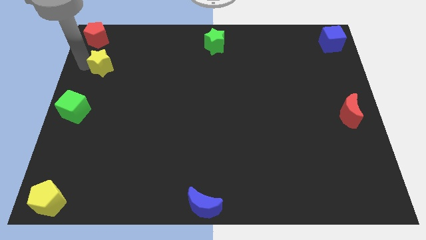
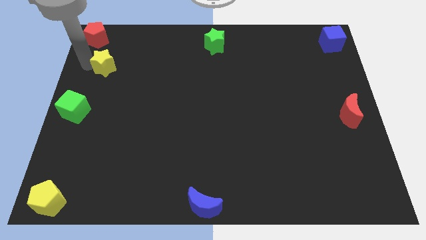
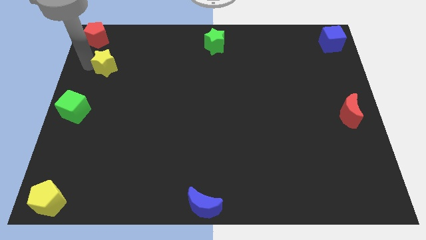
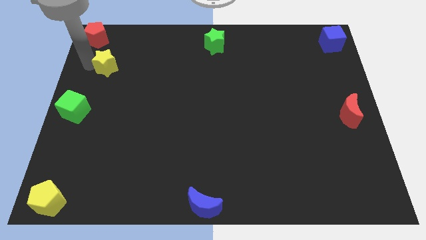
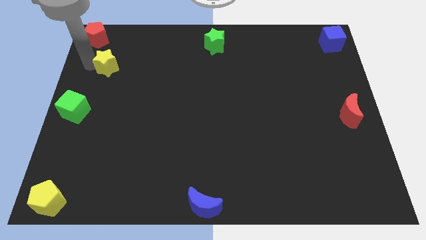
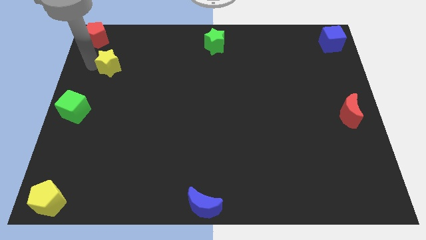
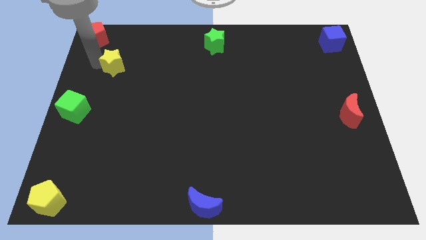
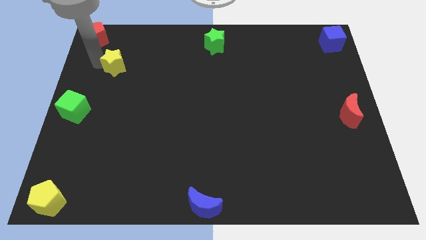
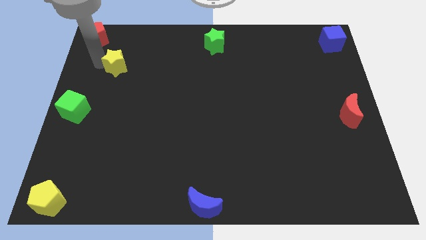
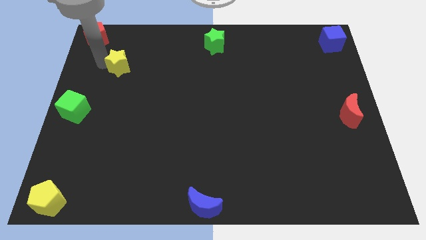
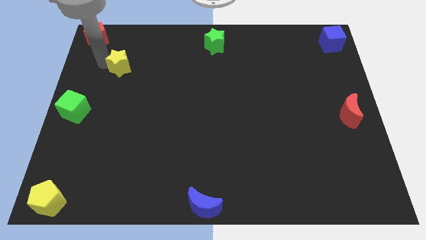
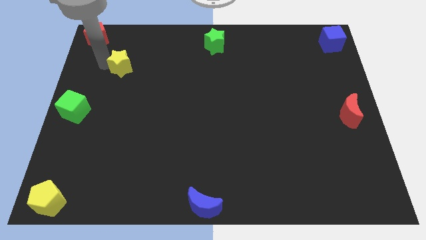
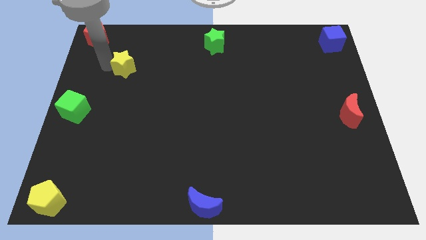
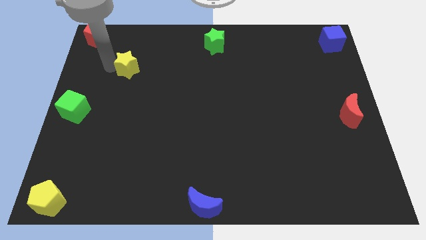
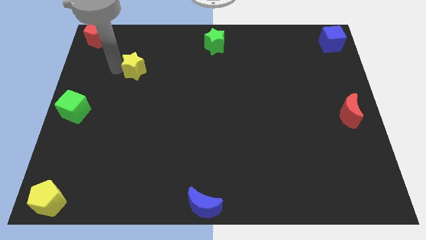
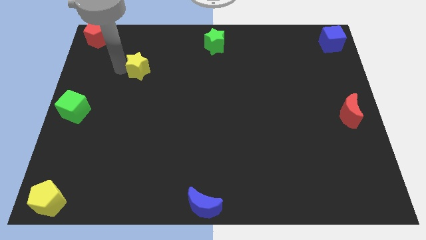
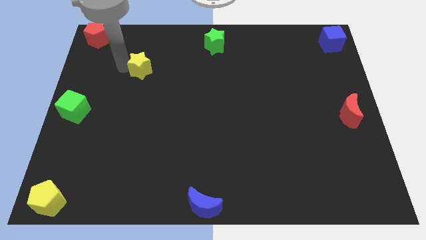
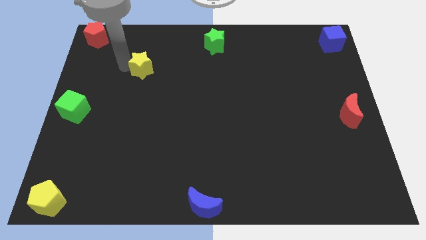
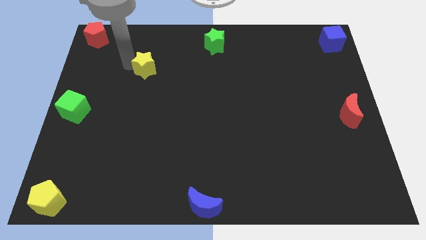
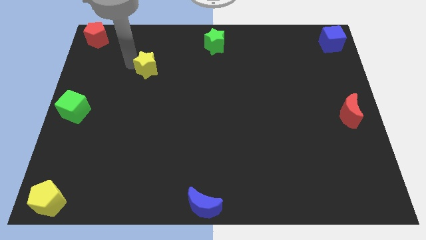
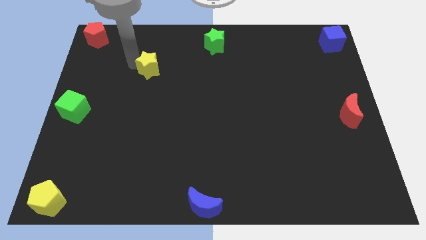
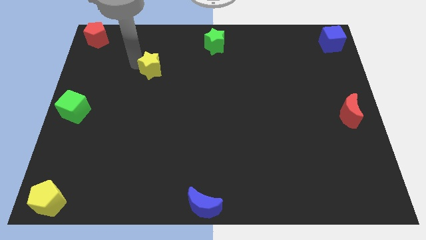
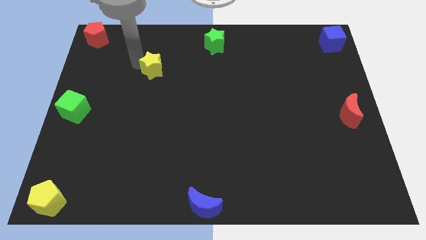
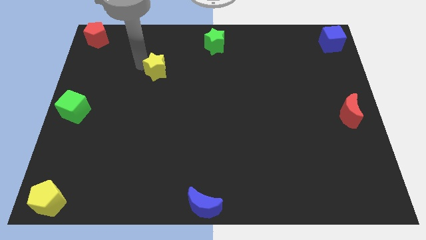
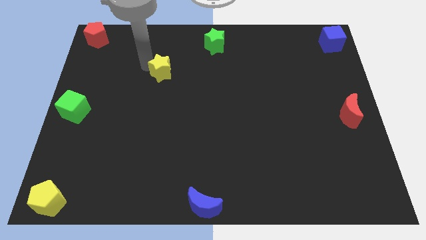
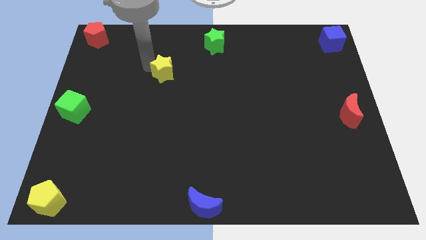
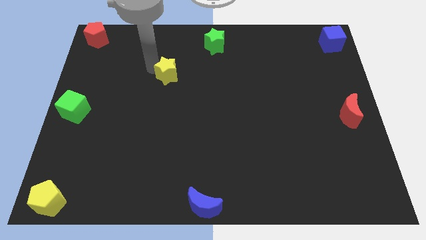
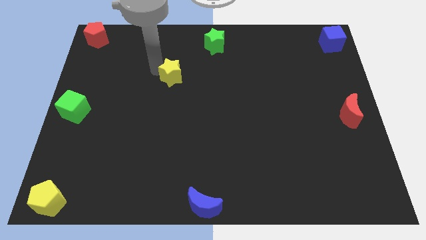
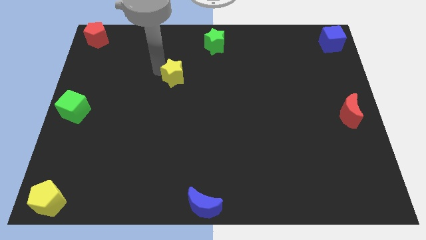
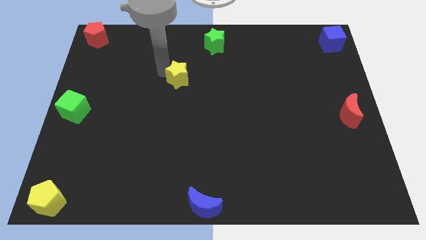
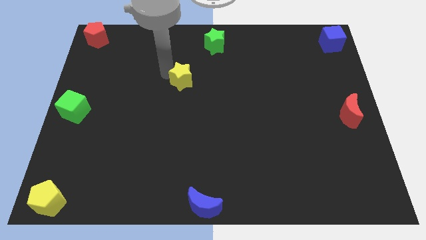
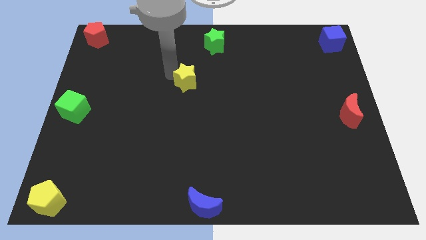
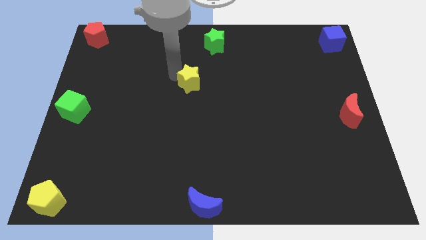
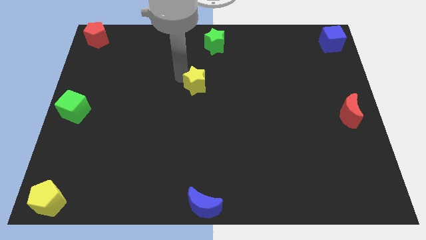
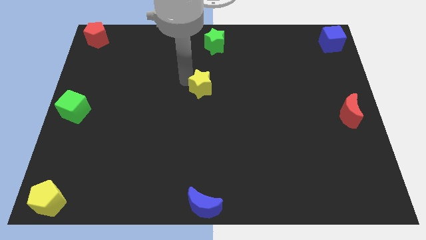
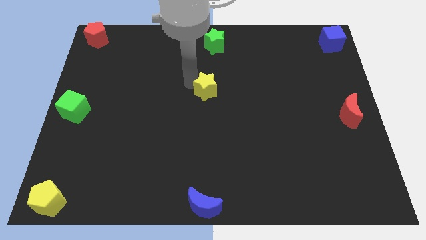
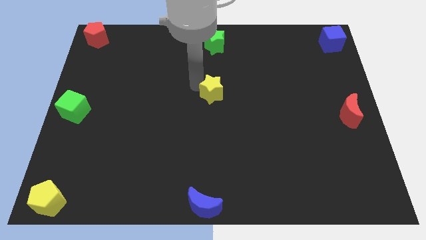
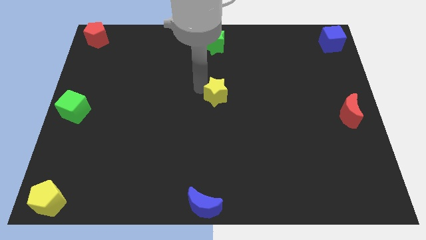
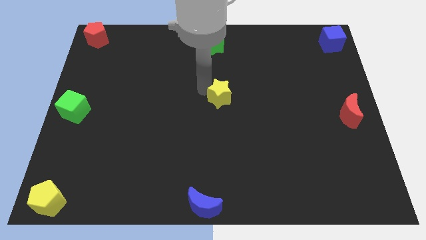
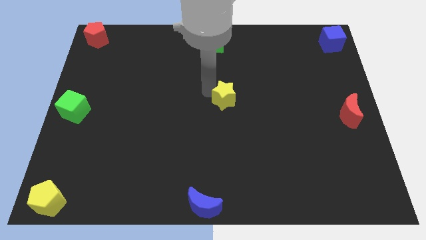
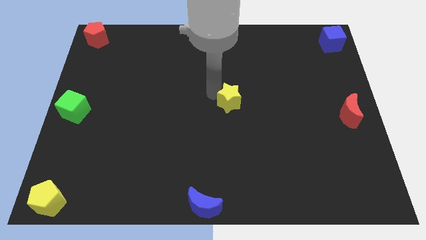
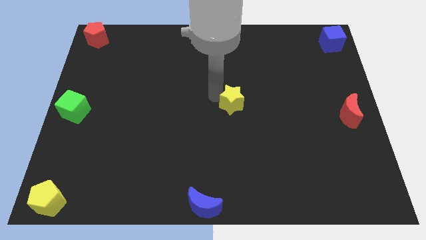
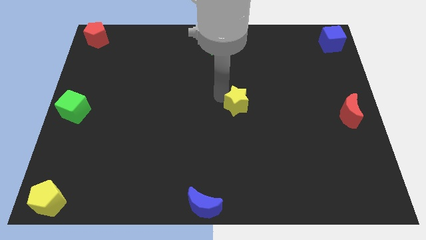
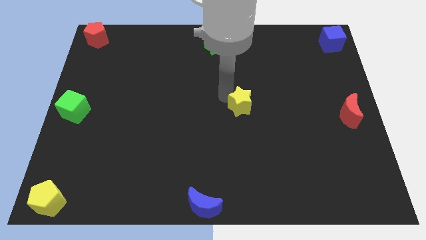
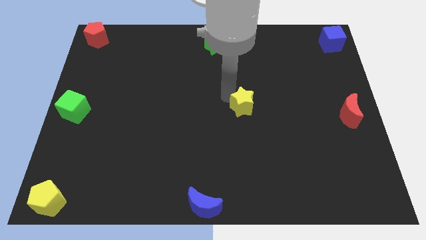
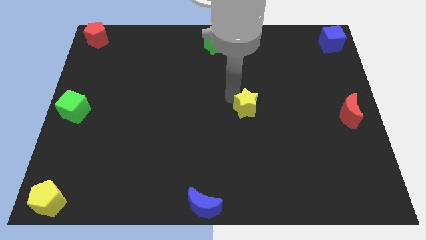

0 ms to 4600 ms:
move the yellow star towards the center of the board

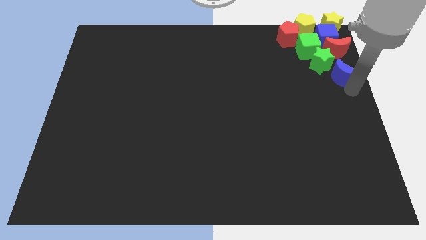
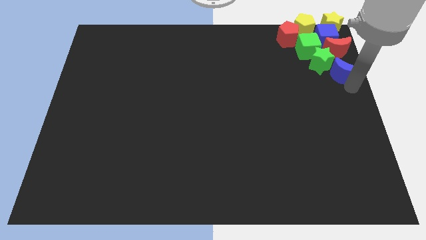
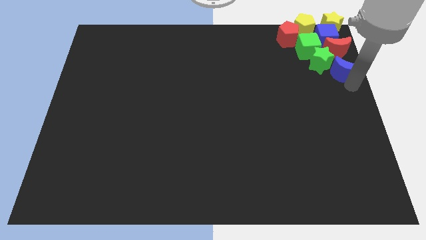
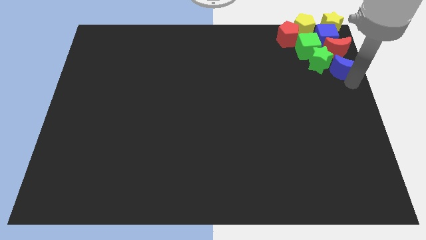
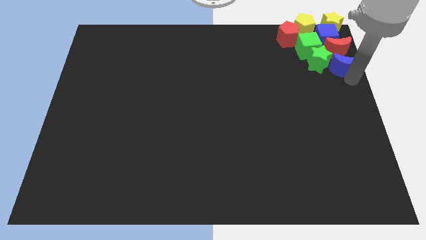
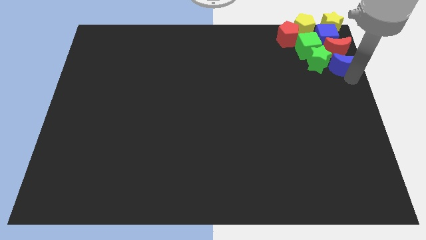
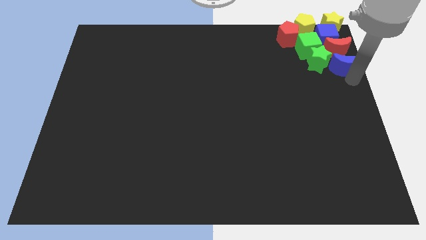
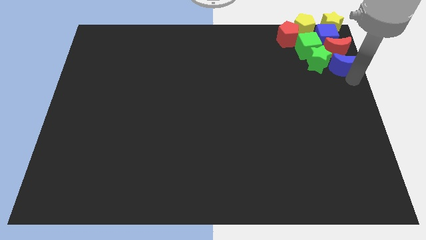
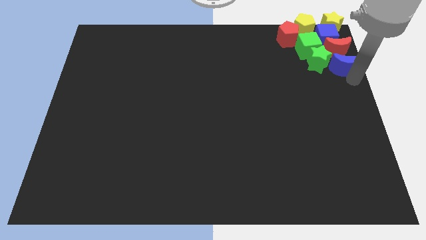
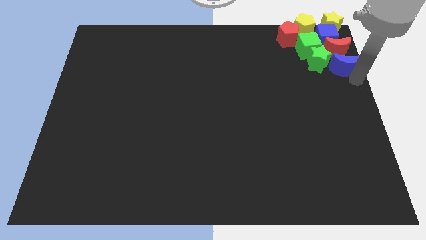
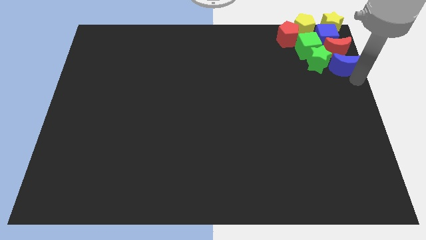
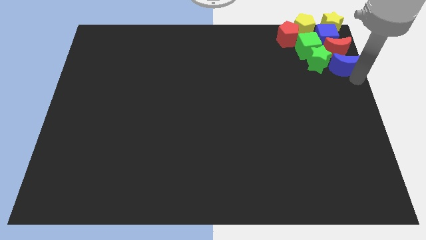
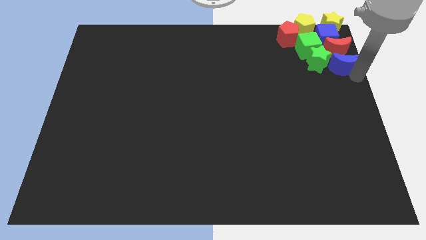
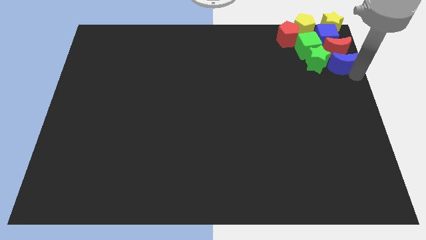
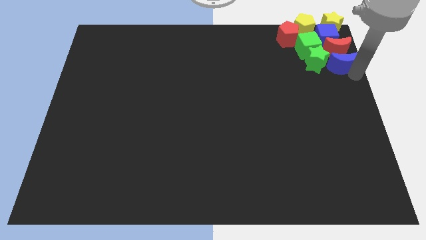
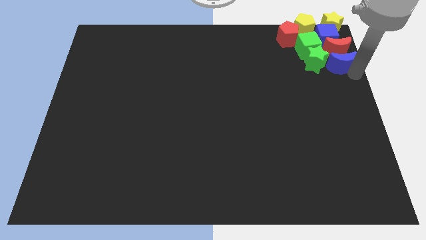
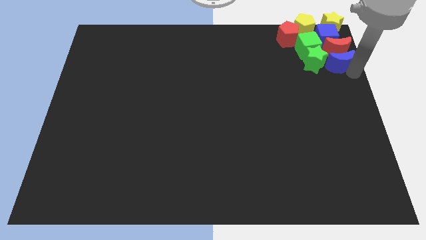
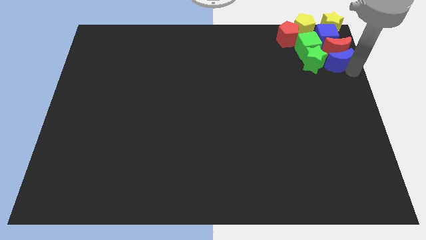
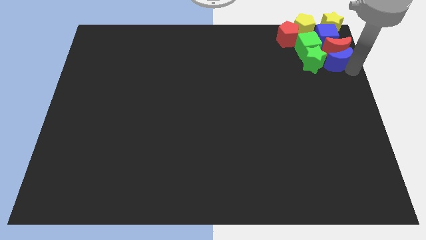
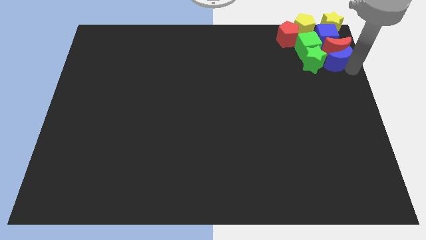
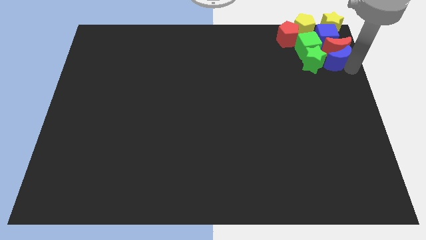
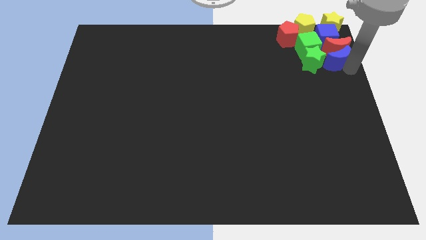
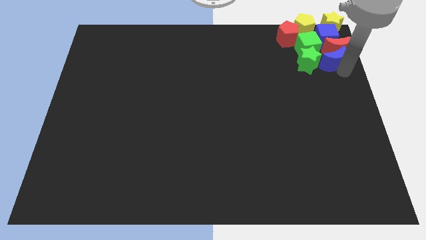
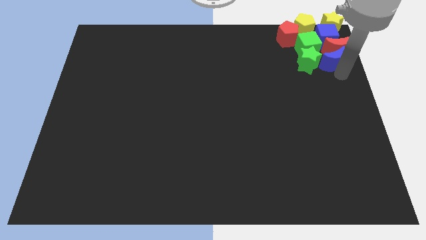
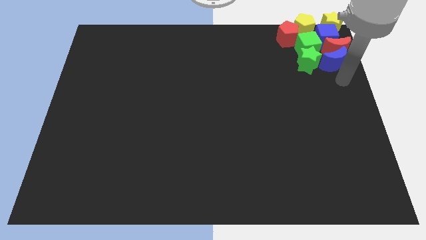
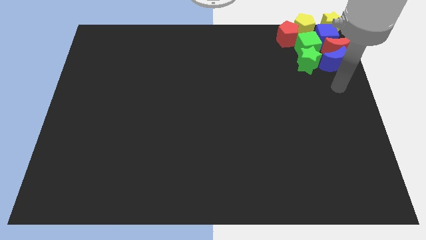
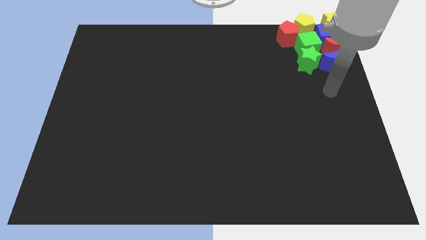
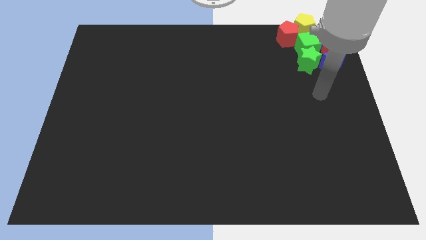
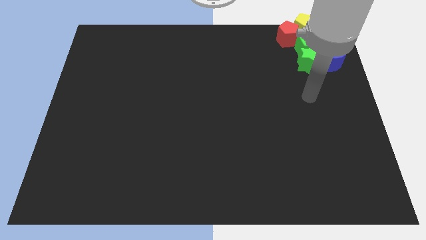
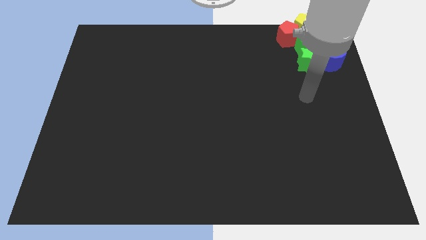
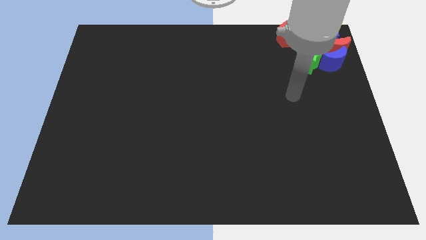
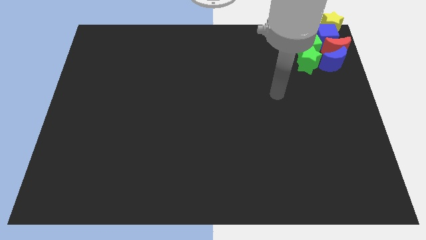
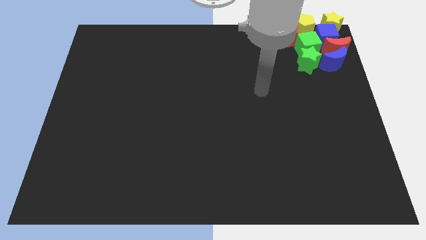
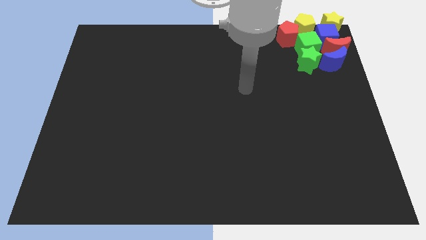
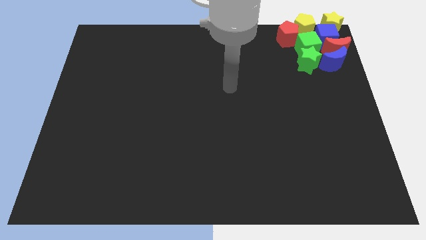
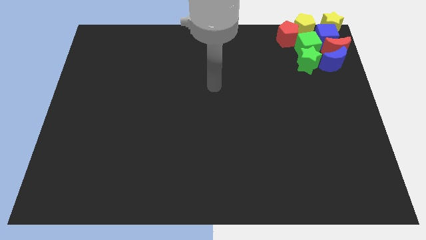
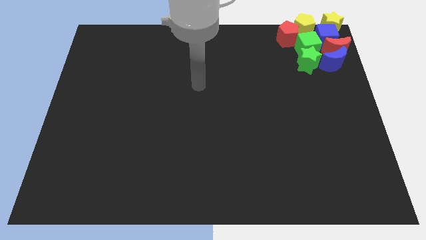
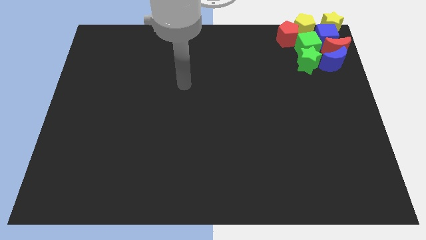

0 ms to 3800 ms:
push the blue moon into group of objects

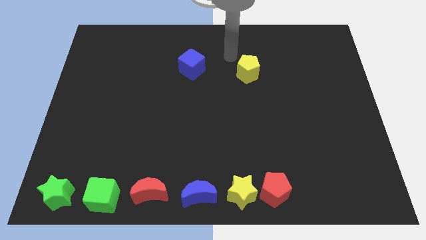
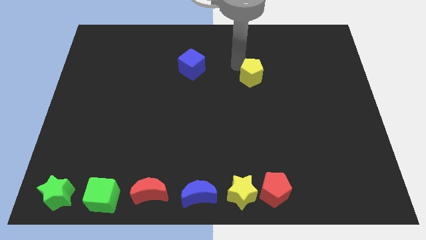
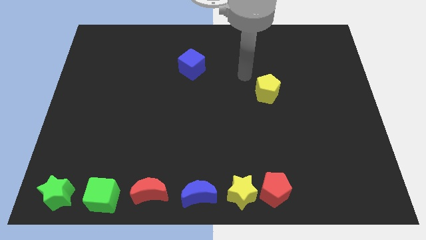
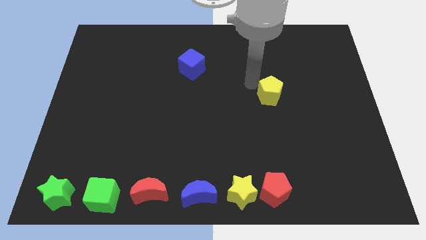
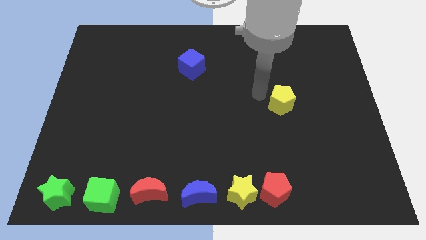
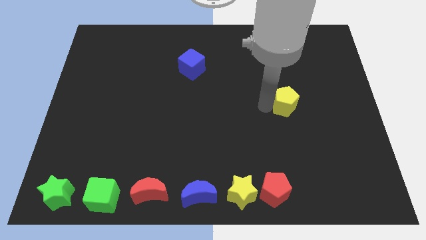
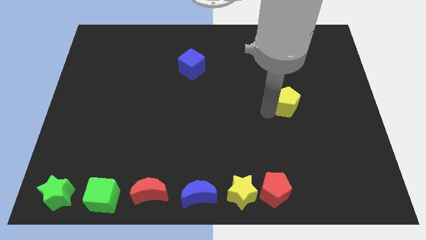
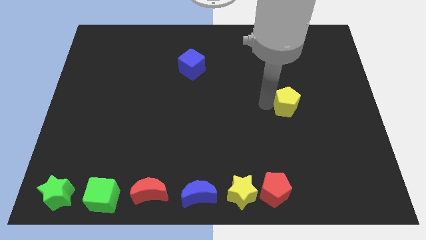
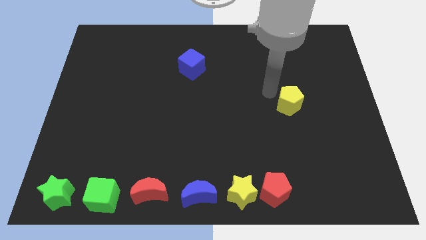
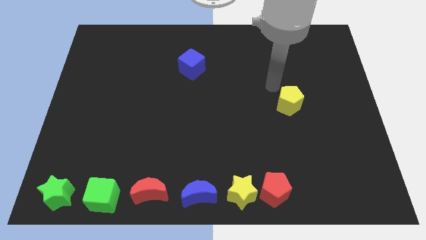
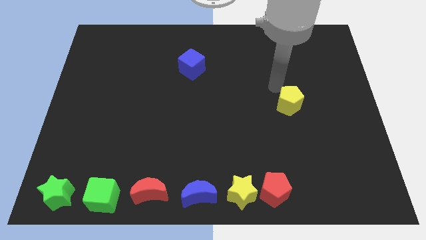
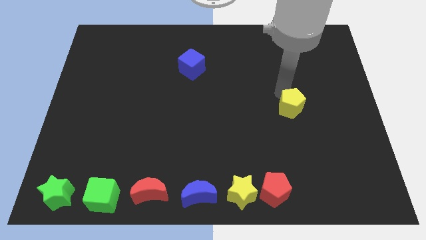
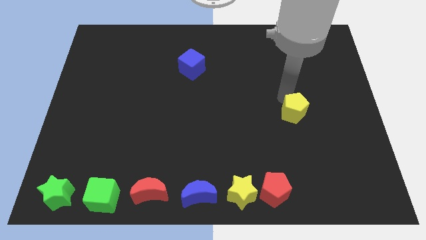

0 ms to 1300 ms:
slightly move the yellow pentagon down of the board
